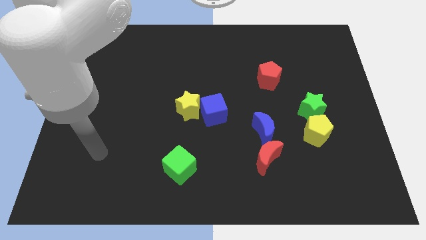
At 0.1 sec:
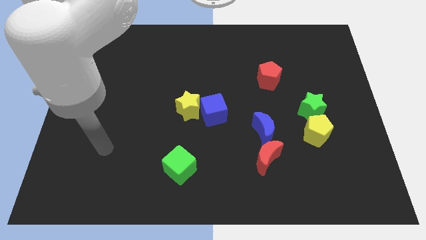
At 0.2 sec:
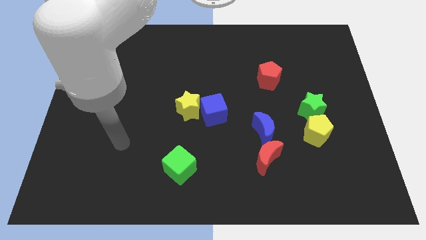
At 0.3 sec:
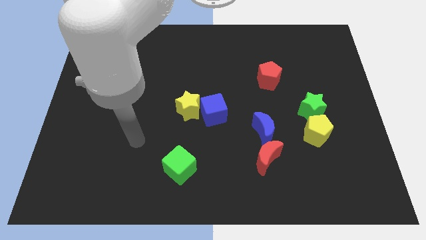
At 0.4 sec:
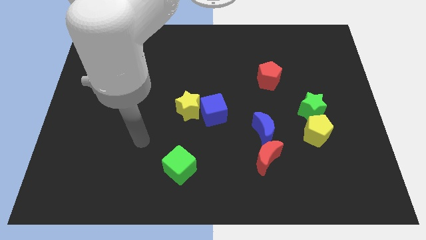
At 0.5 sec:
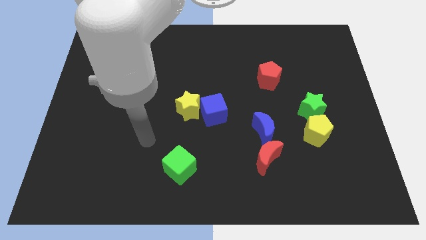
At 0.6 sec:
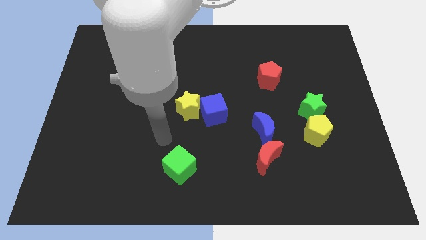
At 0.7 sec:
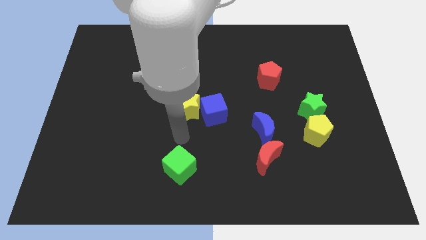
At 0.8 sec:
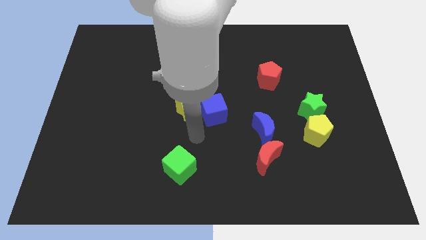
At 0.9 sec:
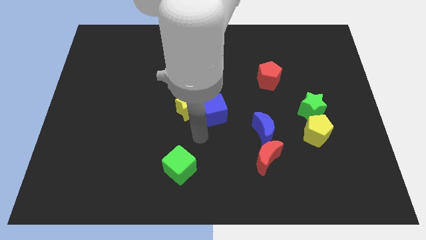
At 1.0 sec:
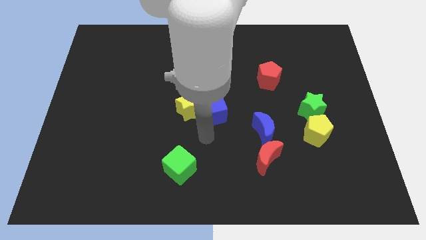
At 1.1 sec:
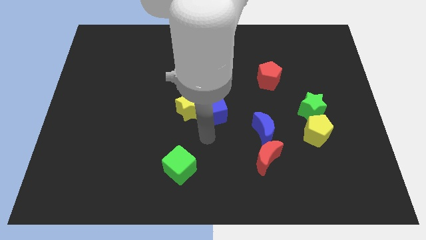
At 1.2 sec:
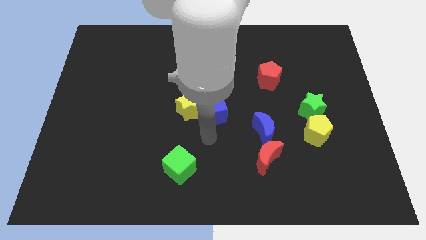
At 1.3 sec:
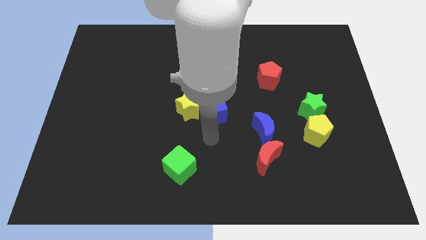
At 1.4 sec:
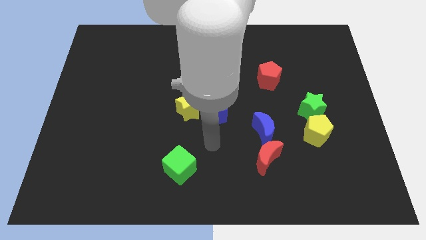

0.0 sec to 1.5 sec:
place your arm to the bottom of blue cube

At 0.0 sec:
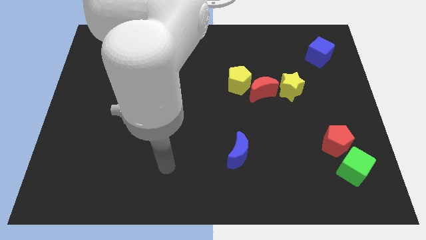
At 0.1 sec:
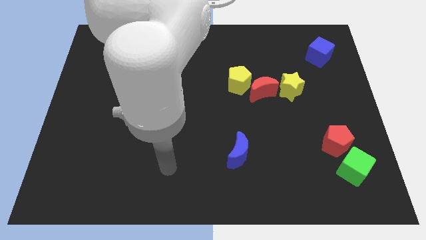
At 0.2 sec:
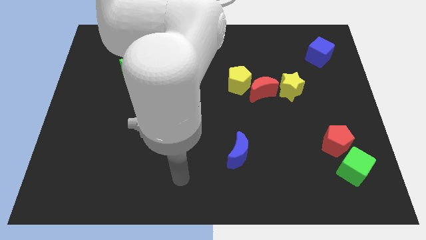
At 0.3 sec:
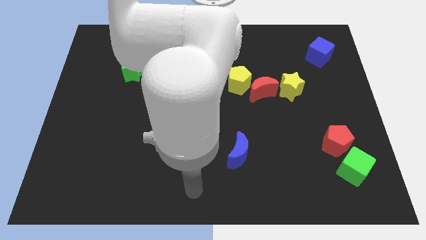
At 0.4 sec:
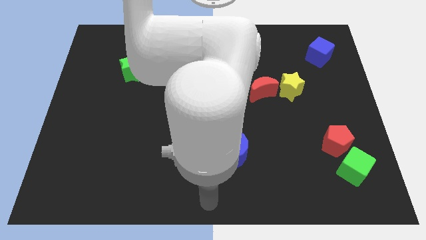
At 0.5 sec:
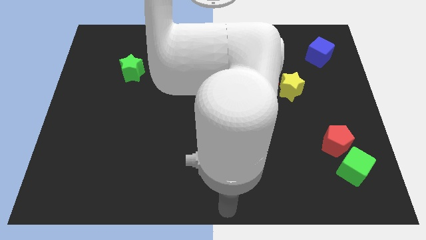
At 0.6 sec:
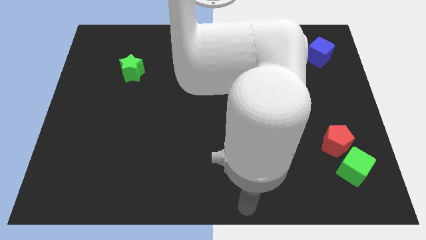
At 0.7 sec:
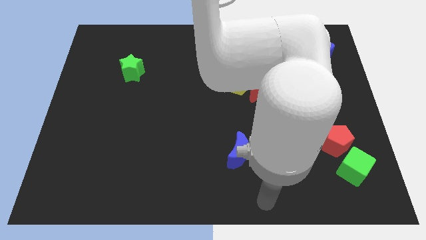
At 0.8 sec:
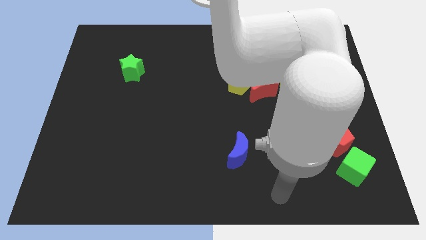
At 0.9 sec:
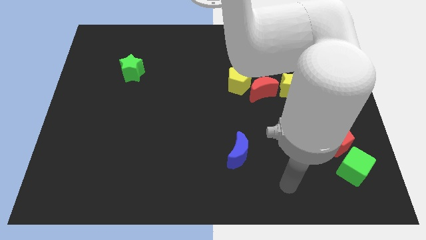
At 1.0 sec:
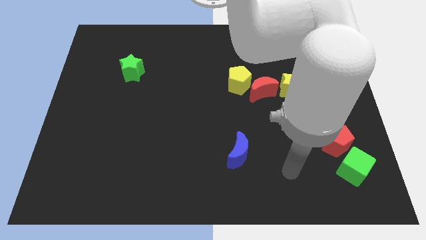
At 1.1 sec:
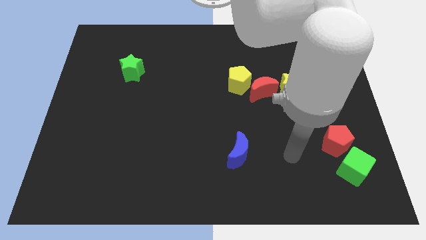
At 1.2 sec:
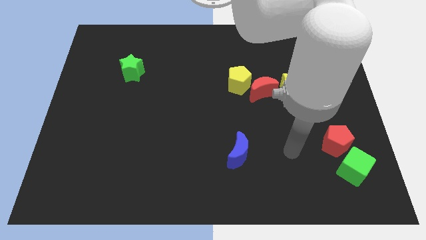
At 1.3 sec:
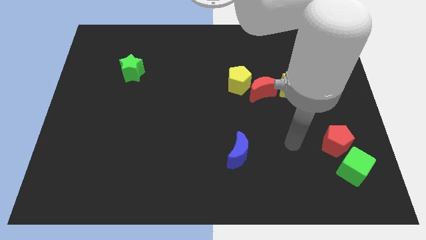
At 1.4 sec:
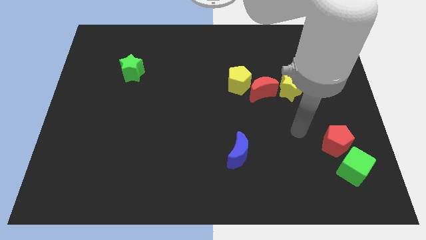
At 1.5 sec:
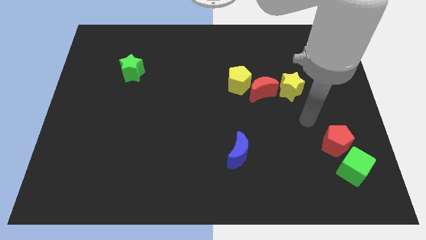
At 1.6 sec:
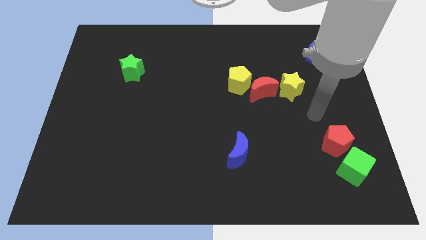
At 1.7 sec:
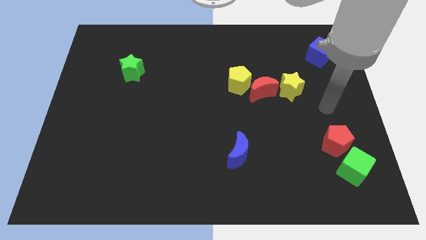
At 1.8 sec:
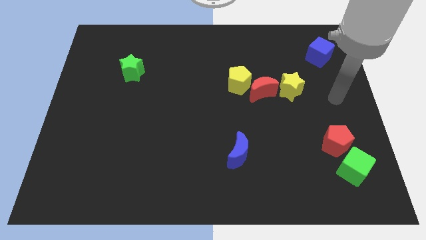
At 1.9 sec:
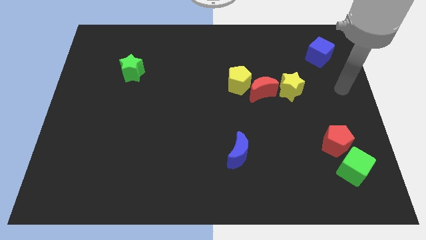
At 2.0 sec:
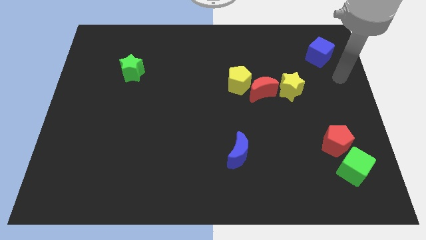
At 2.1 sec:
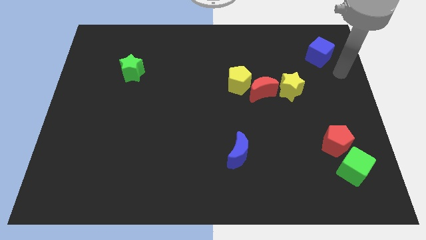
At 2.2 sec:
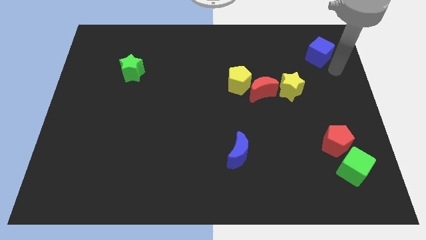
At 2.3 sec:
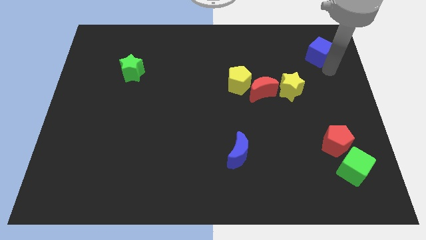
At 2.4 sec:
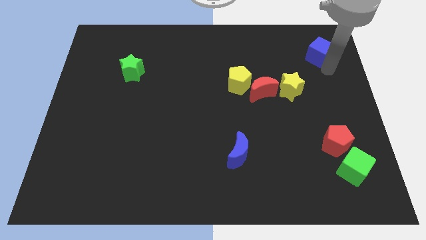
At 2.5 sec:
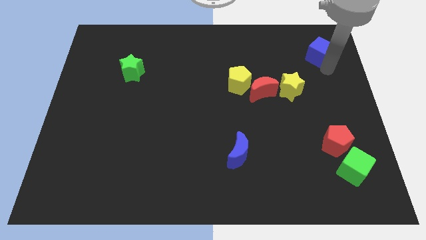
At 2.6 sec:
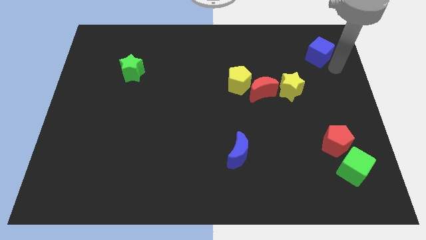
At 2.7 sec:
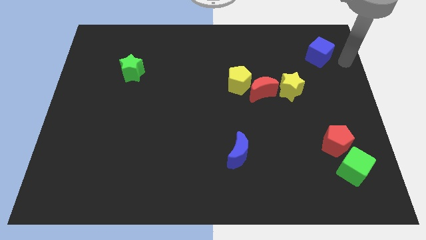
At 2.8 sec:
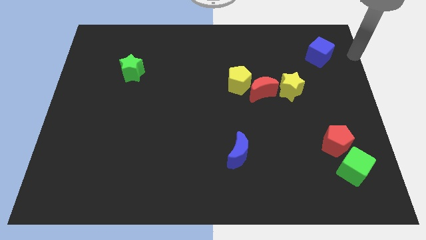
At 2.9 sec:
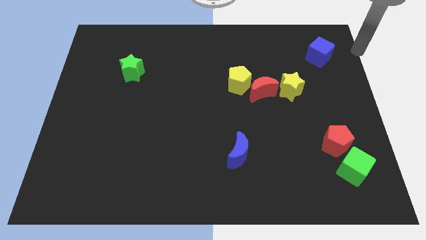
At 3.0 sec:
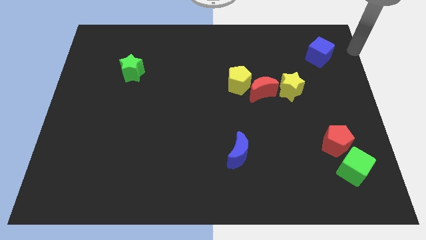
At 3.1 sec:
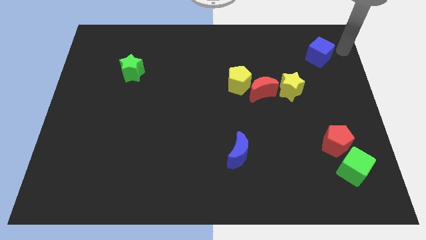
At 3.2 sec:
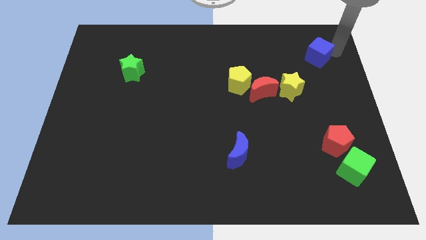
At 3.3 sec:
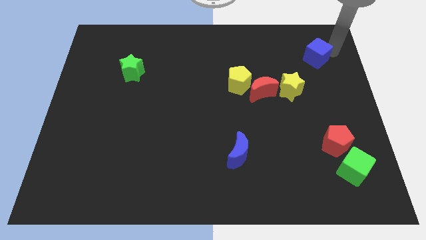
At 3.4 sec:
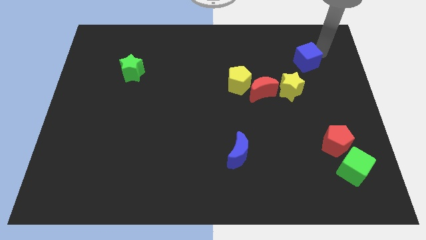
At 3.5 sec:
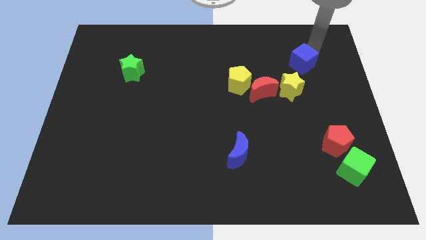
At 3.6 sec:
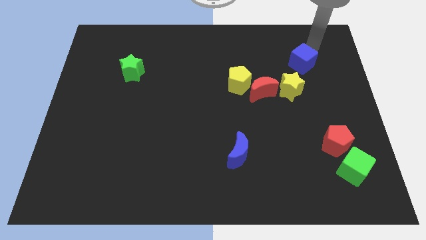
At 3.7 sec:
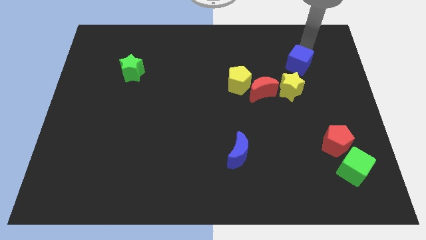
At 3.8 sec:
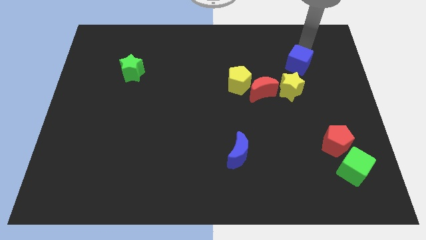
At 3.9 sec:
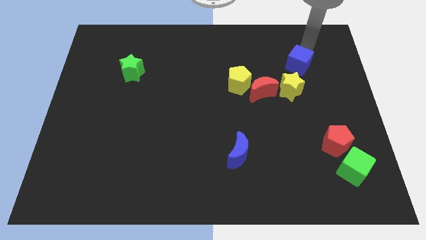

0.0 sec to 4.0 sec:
place the blue cube diagonally top right to yellow star

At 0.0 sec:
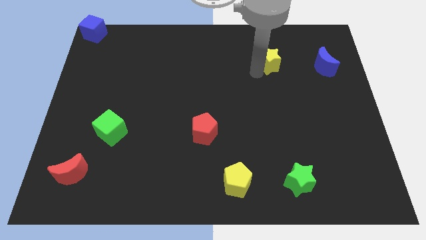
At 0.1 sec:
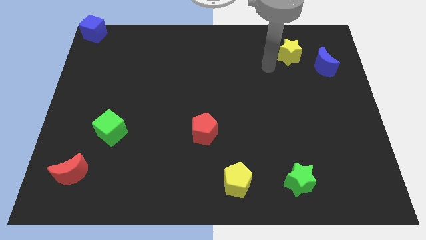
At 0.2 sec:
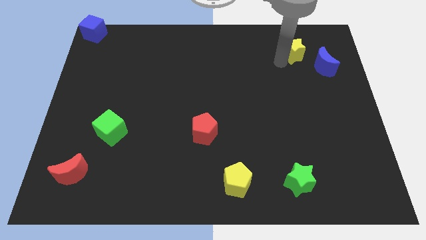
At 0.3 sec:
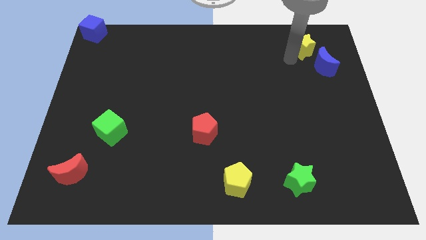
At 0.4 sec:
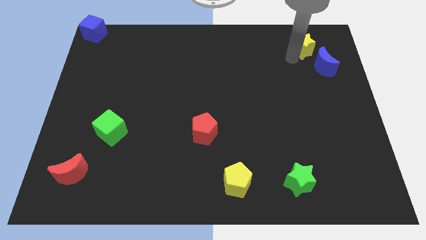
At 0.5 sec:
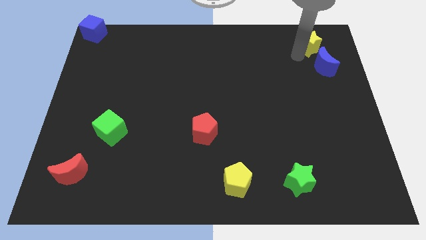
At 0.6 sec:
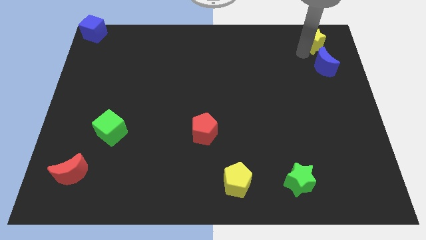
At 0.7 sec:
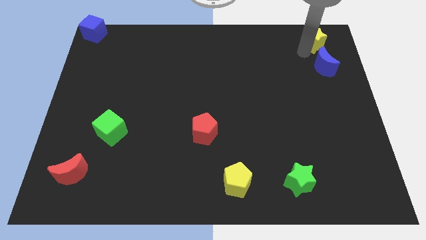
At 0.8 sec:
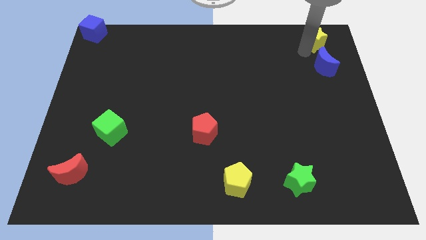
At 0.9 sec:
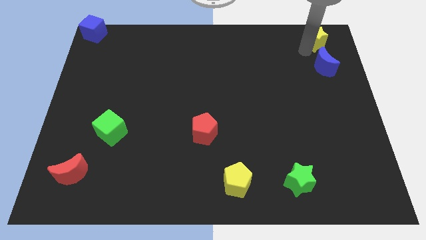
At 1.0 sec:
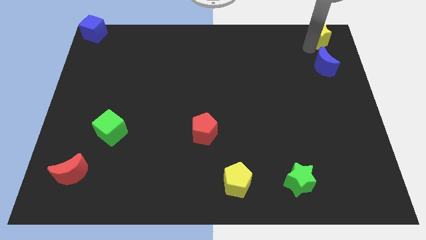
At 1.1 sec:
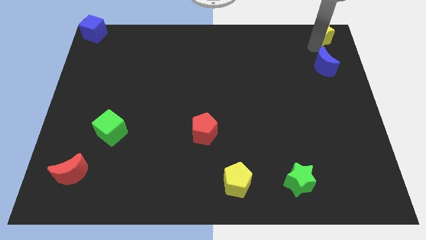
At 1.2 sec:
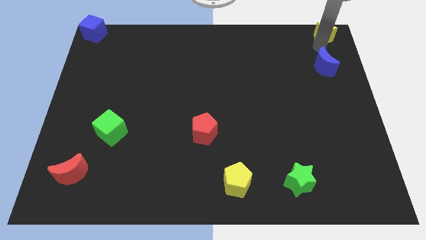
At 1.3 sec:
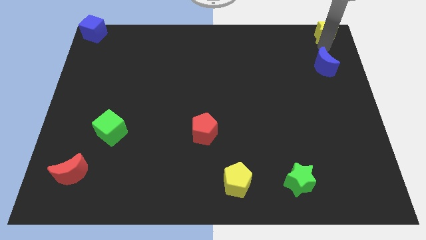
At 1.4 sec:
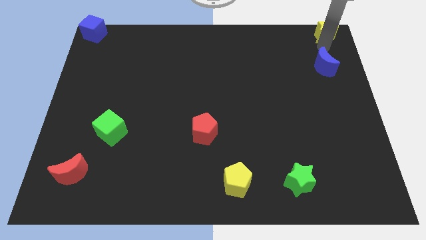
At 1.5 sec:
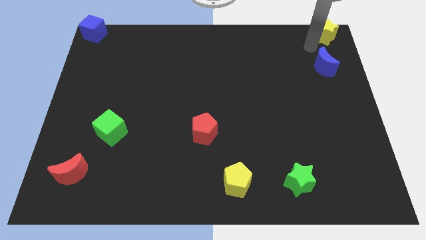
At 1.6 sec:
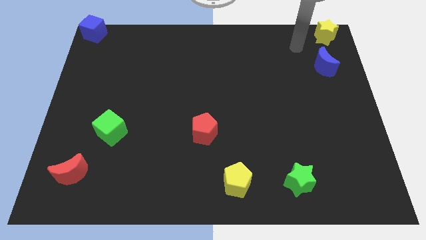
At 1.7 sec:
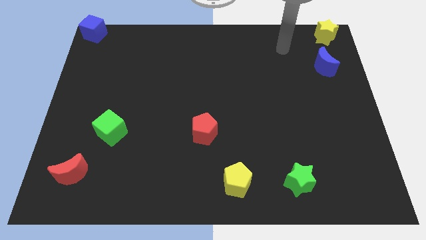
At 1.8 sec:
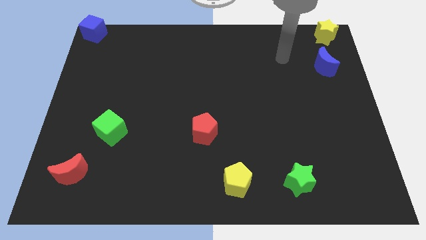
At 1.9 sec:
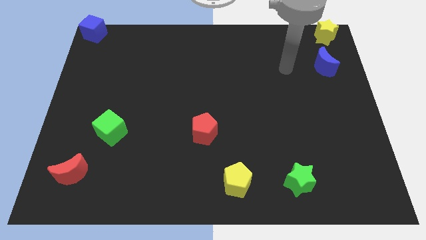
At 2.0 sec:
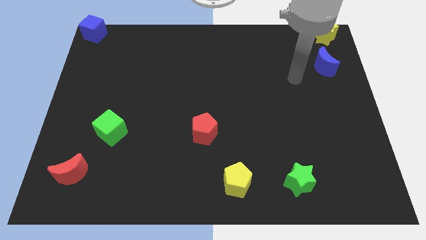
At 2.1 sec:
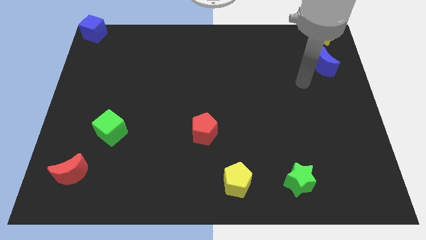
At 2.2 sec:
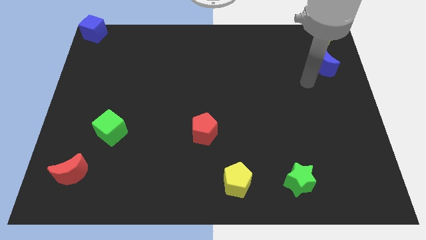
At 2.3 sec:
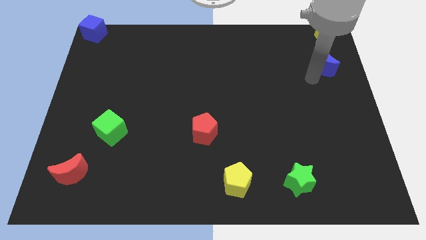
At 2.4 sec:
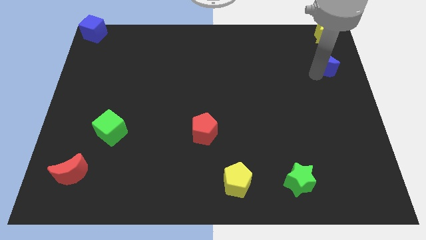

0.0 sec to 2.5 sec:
place the yellow pentagon above the blue crescent

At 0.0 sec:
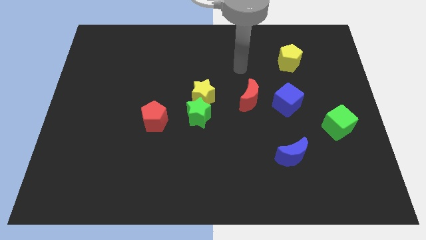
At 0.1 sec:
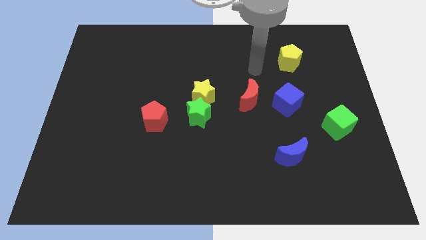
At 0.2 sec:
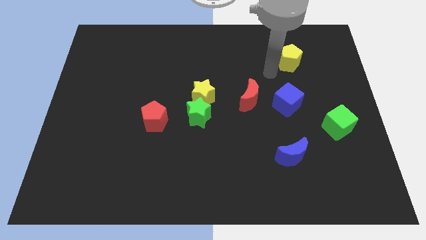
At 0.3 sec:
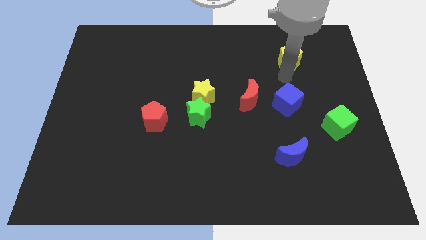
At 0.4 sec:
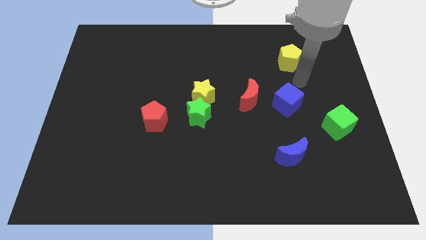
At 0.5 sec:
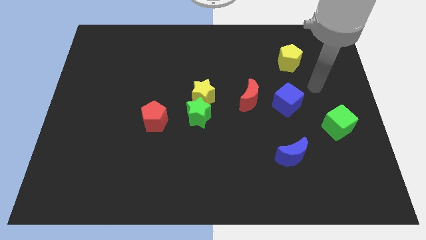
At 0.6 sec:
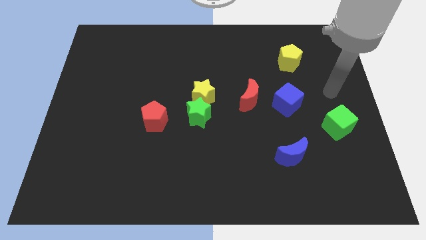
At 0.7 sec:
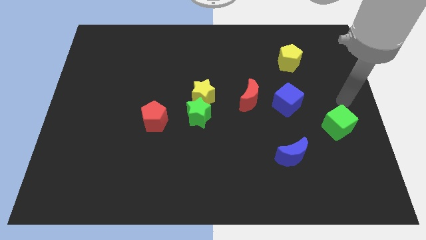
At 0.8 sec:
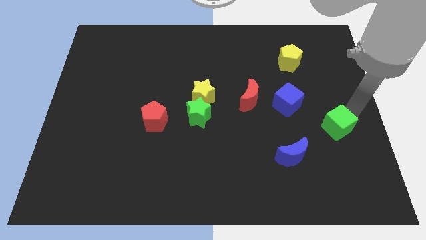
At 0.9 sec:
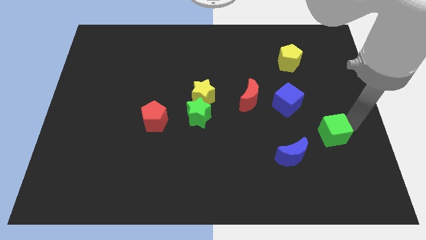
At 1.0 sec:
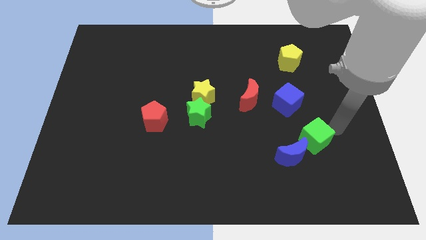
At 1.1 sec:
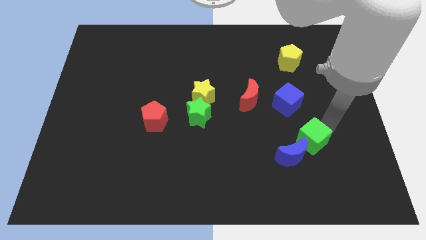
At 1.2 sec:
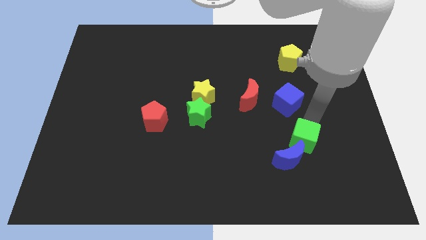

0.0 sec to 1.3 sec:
push the green cube slightly towards down
